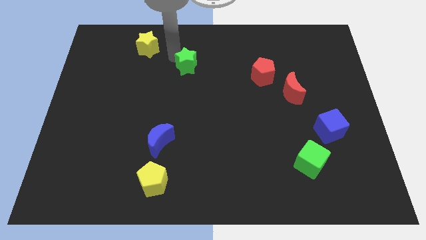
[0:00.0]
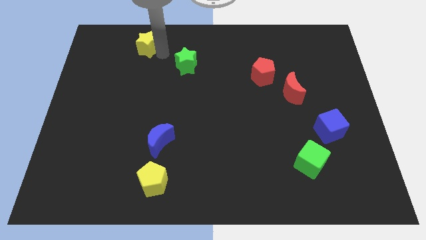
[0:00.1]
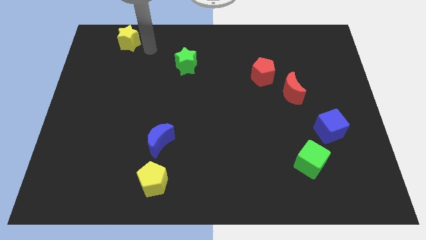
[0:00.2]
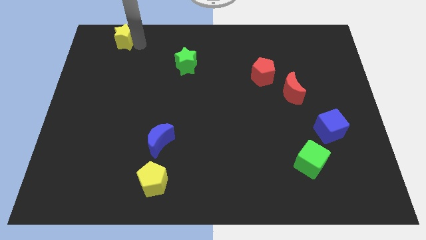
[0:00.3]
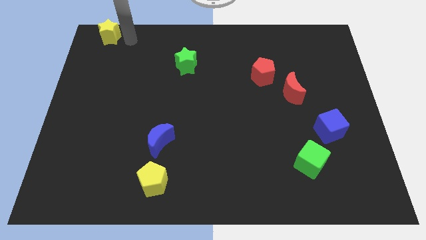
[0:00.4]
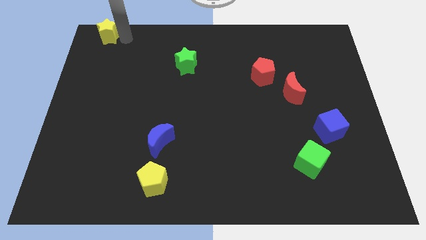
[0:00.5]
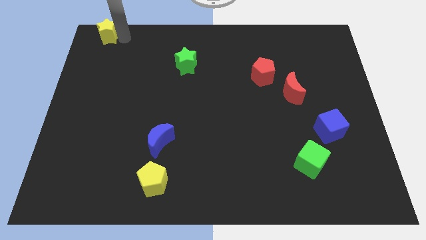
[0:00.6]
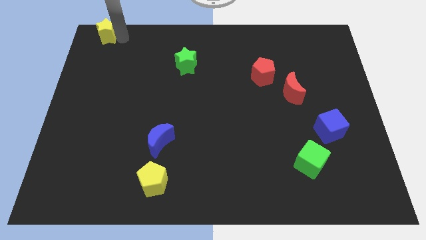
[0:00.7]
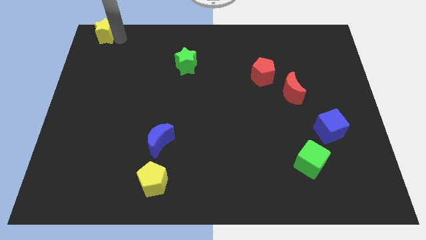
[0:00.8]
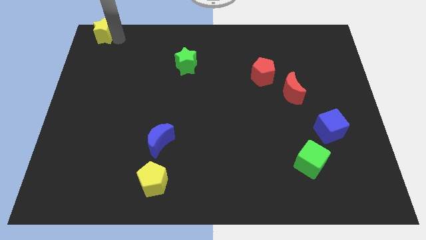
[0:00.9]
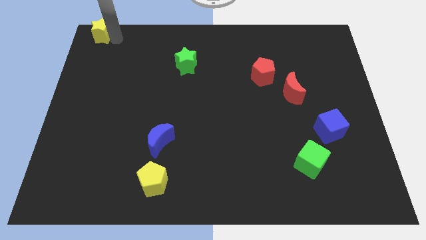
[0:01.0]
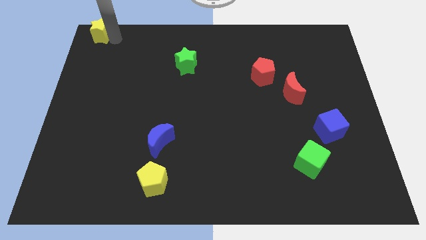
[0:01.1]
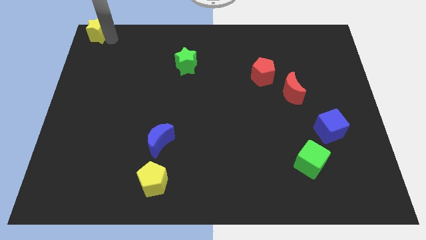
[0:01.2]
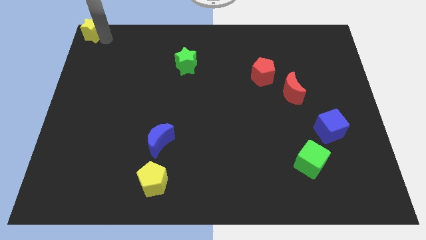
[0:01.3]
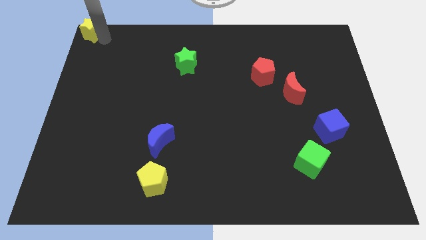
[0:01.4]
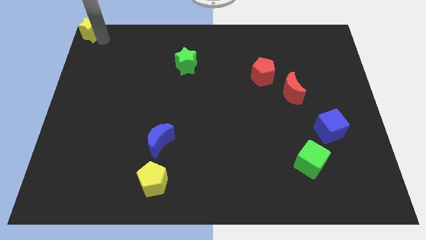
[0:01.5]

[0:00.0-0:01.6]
place the yellow star at top left corner of the board

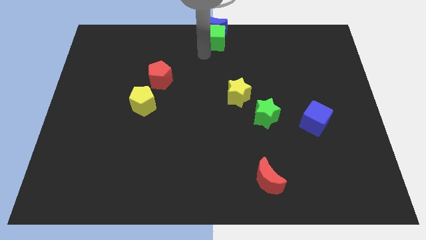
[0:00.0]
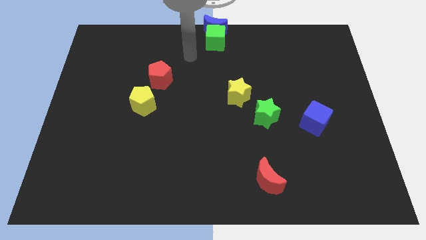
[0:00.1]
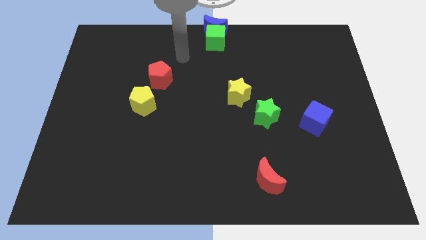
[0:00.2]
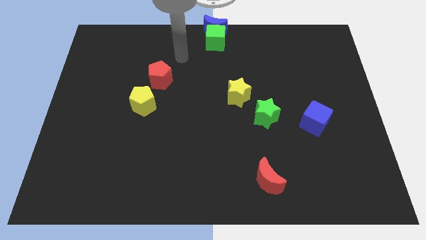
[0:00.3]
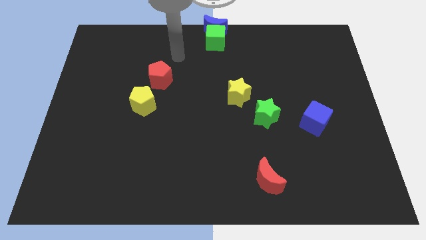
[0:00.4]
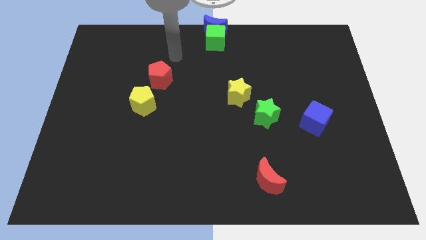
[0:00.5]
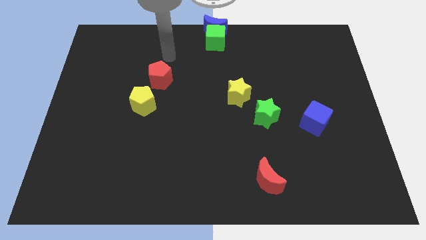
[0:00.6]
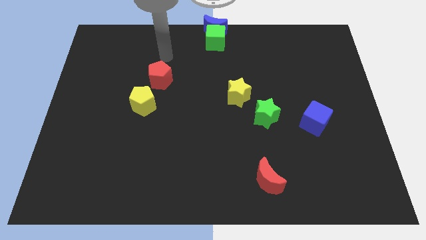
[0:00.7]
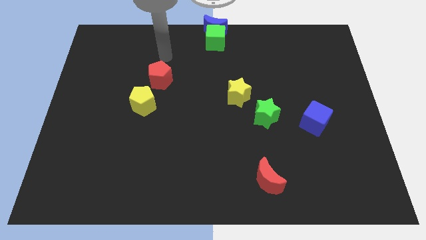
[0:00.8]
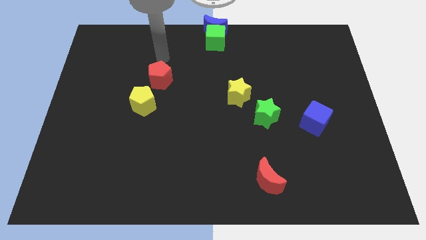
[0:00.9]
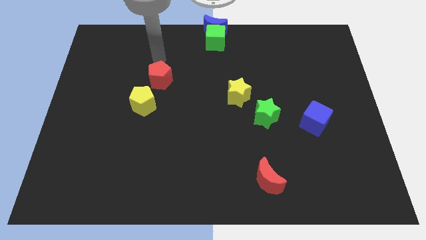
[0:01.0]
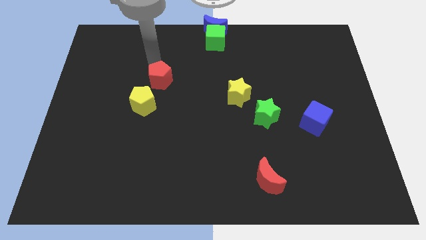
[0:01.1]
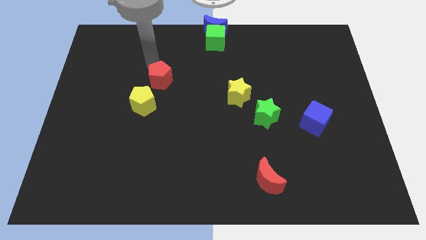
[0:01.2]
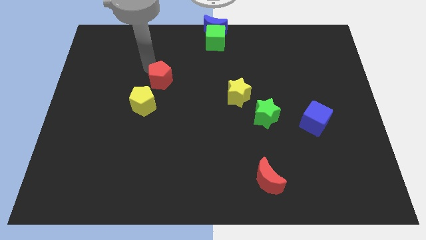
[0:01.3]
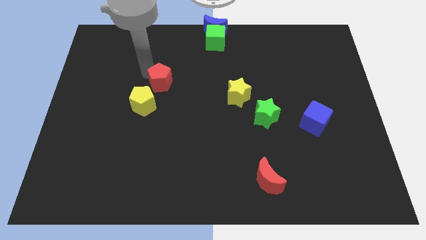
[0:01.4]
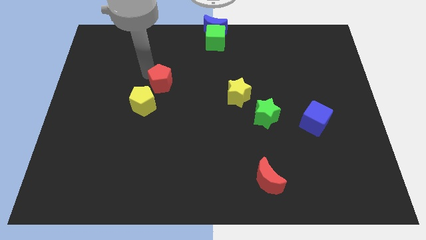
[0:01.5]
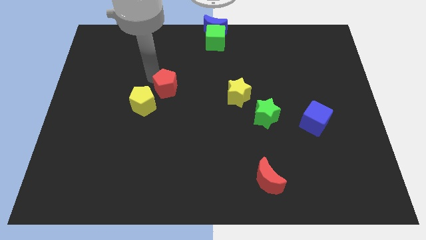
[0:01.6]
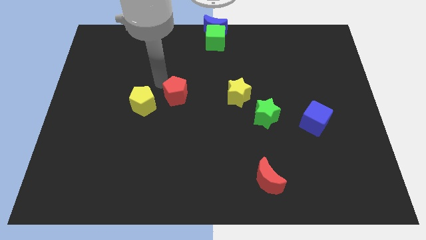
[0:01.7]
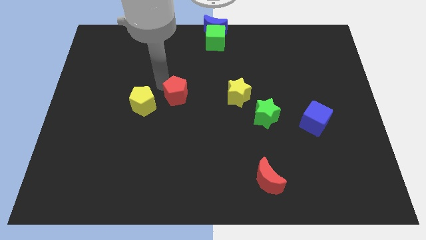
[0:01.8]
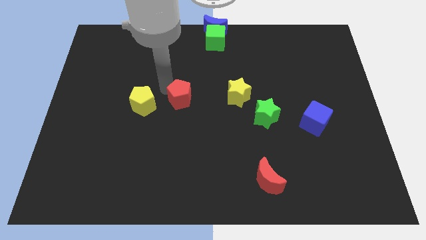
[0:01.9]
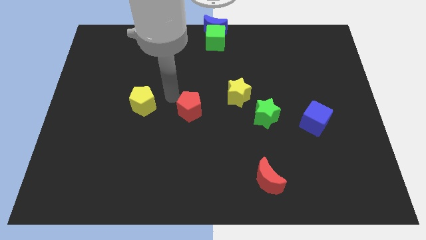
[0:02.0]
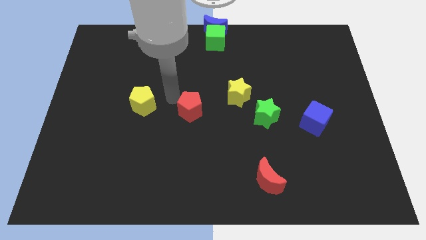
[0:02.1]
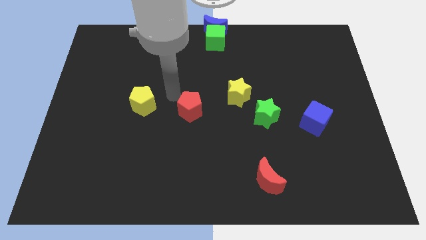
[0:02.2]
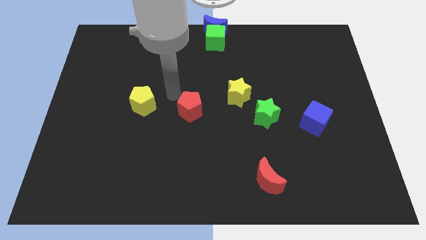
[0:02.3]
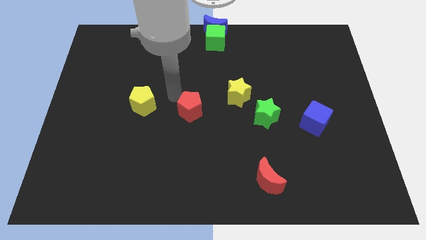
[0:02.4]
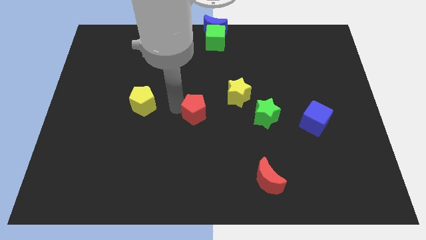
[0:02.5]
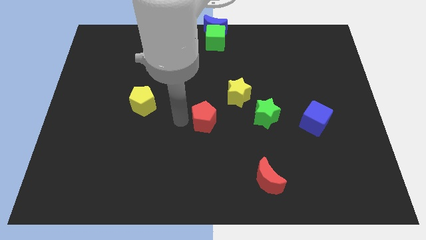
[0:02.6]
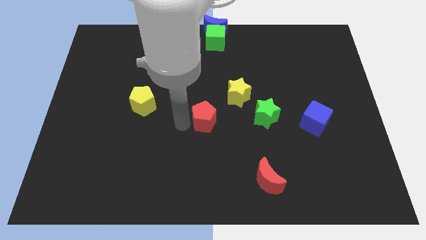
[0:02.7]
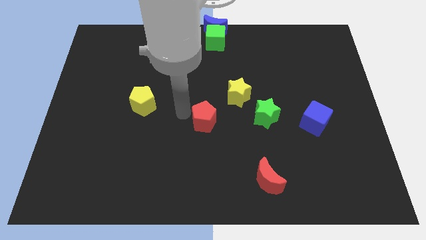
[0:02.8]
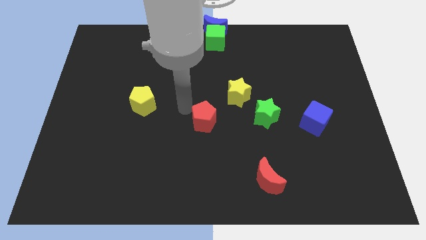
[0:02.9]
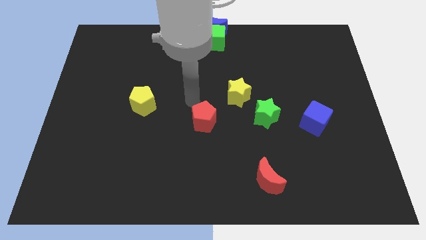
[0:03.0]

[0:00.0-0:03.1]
move red pentagon to the left of green star

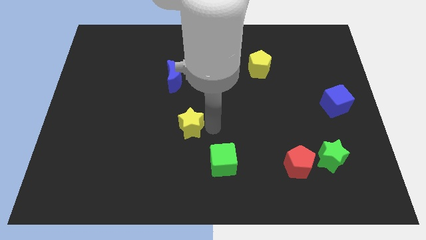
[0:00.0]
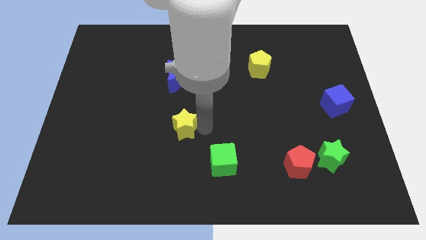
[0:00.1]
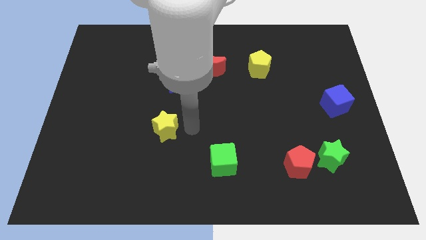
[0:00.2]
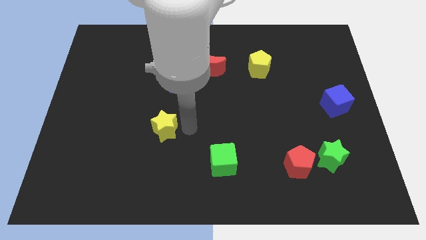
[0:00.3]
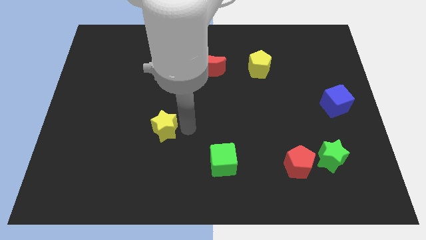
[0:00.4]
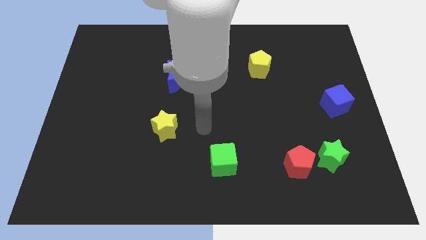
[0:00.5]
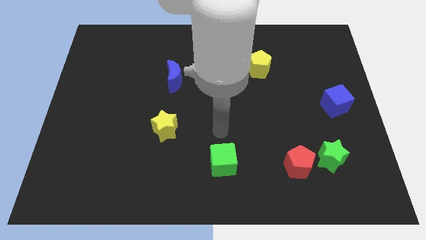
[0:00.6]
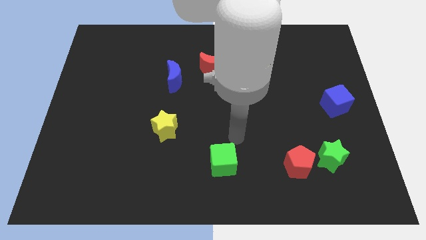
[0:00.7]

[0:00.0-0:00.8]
place the yellow star vertically below the blue crescent

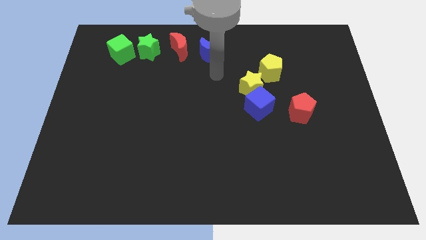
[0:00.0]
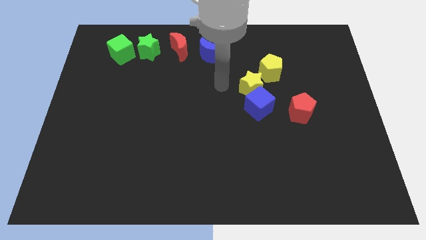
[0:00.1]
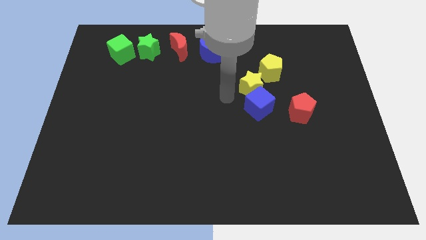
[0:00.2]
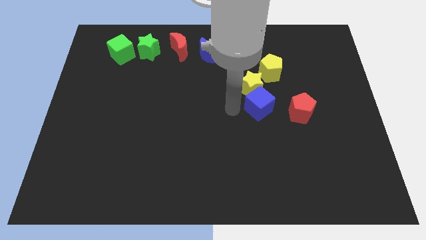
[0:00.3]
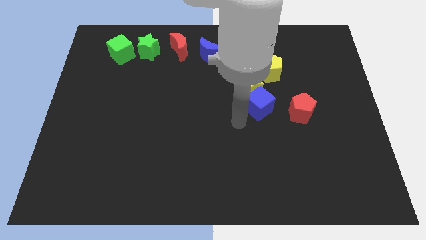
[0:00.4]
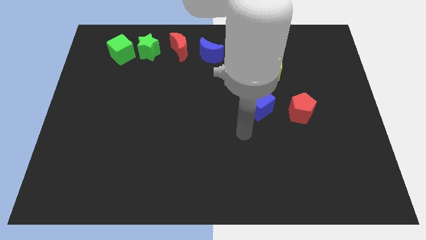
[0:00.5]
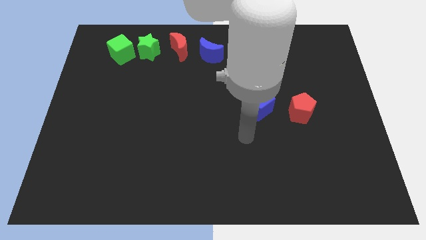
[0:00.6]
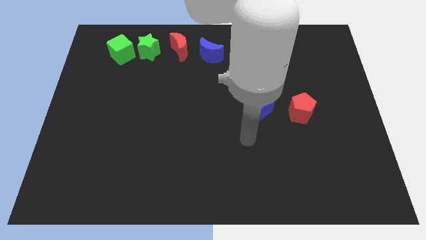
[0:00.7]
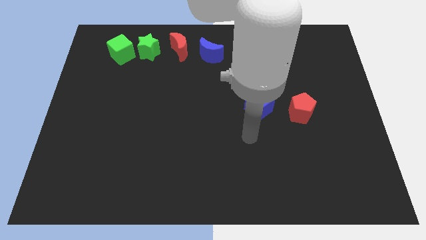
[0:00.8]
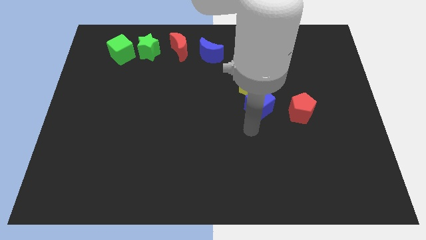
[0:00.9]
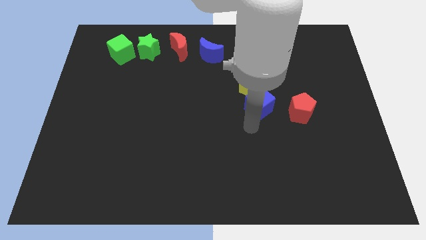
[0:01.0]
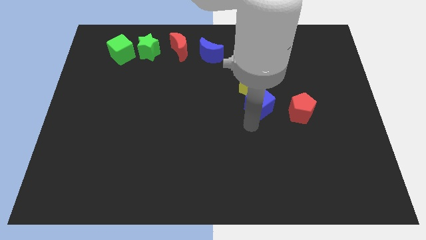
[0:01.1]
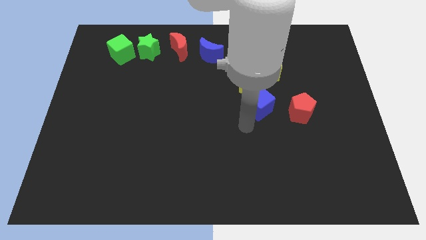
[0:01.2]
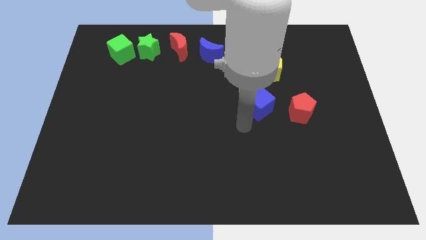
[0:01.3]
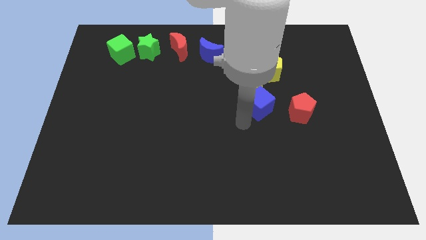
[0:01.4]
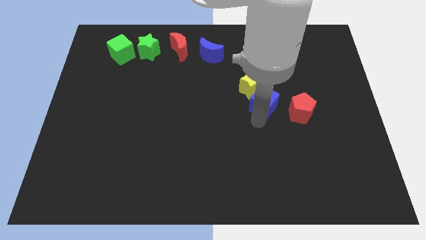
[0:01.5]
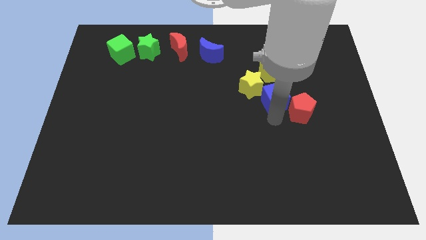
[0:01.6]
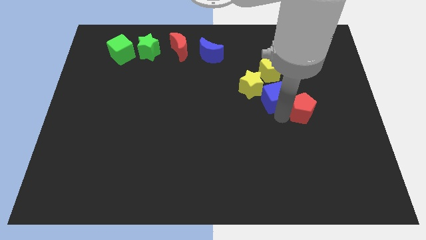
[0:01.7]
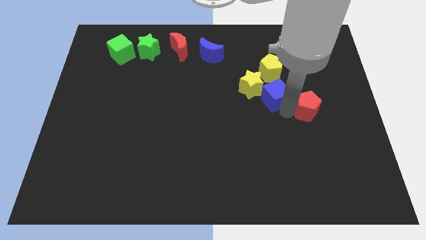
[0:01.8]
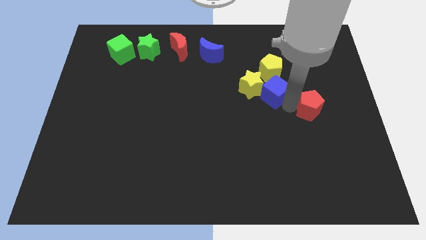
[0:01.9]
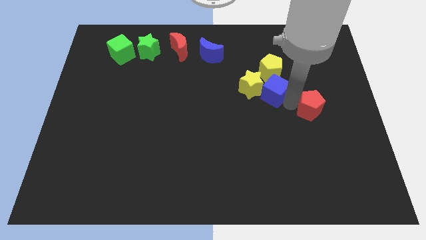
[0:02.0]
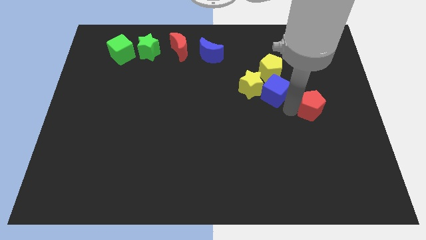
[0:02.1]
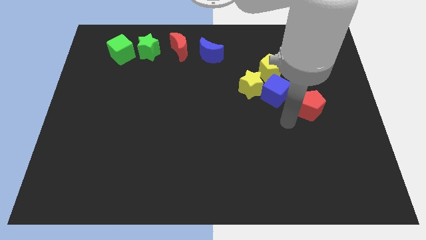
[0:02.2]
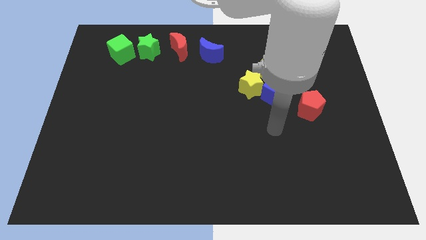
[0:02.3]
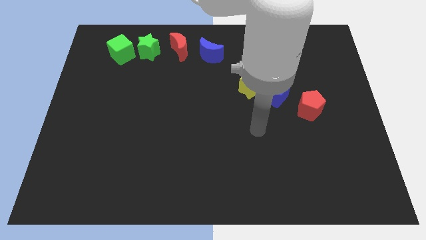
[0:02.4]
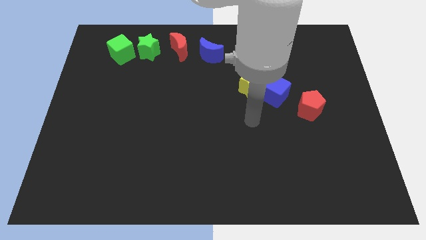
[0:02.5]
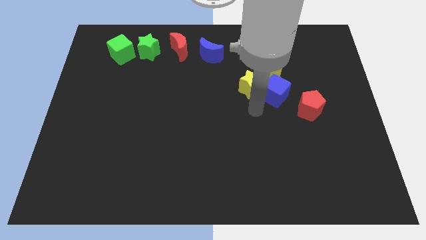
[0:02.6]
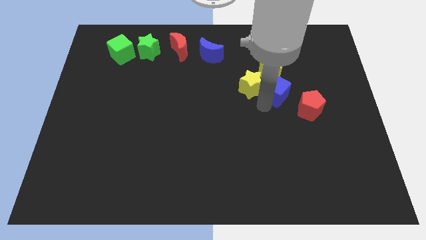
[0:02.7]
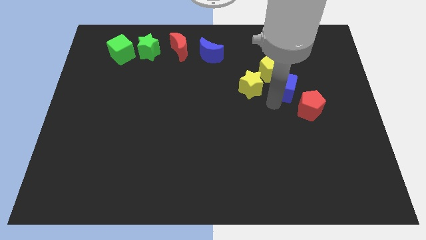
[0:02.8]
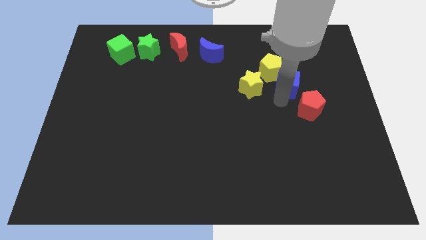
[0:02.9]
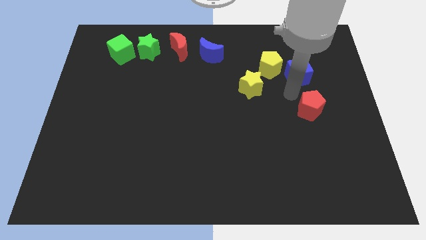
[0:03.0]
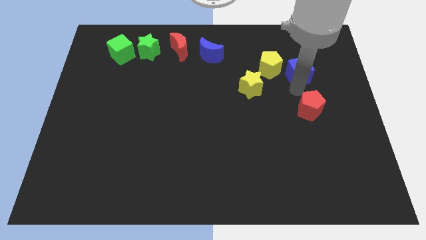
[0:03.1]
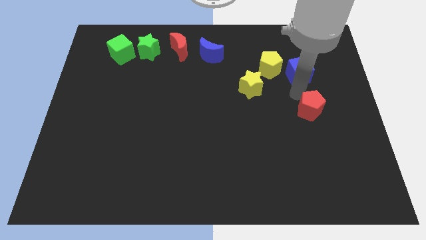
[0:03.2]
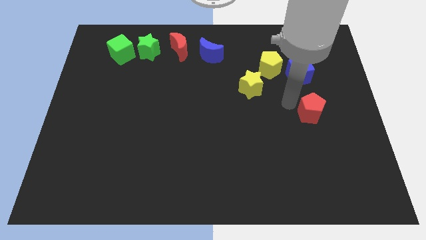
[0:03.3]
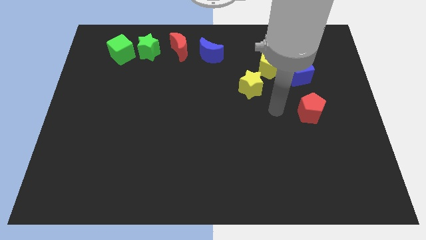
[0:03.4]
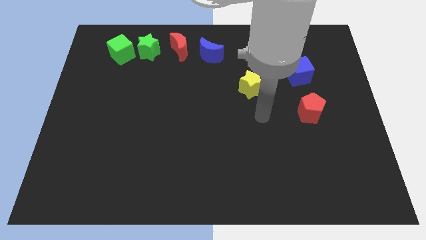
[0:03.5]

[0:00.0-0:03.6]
push the blue cube to the right side of the board
